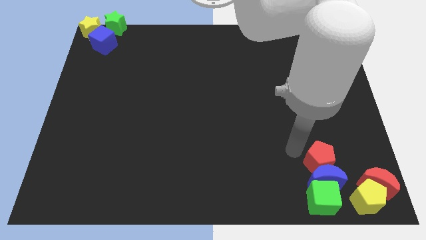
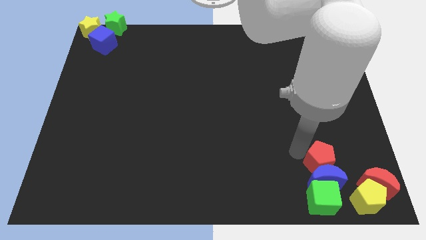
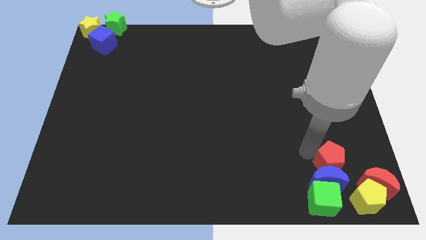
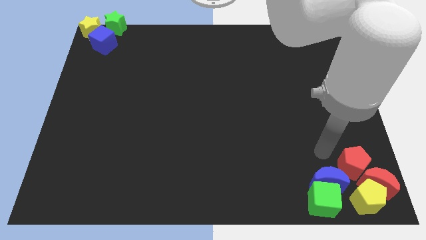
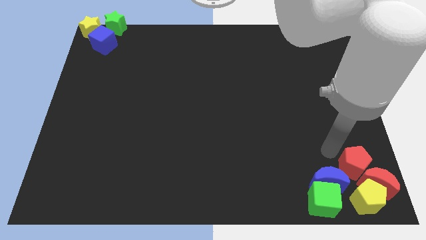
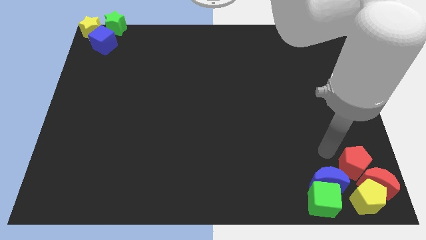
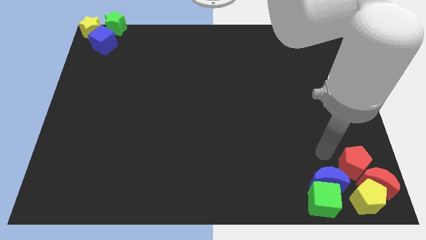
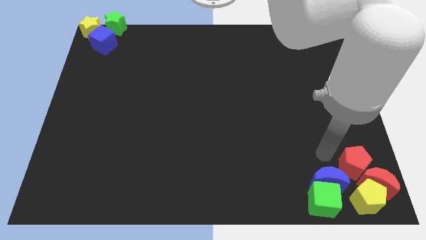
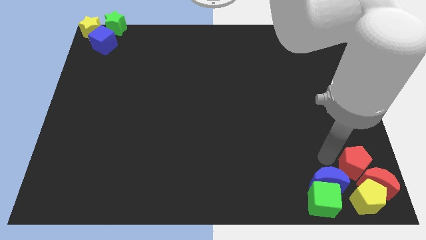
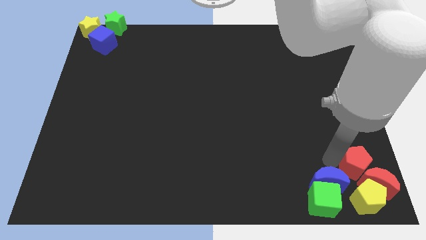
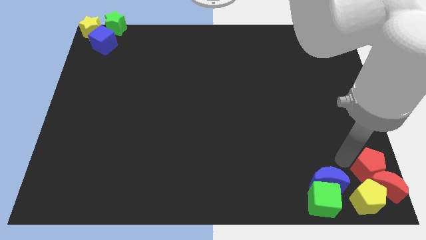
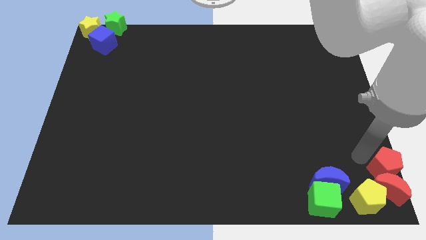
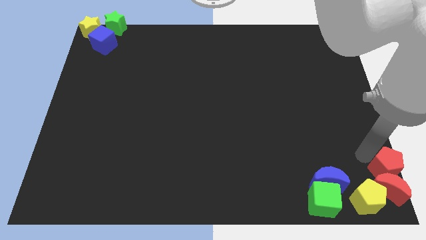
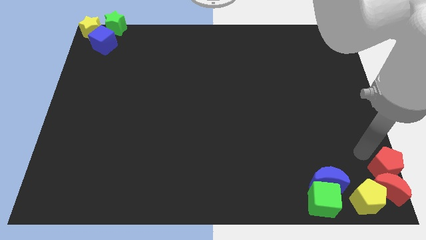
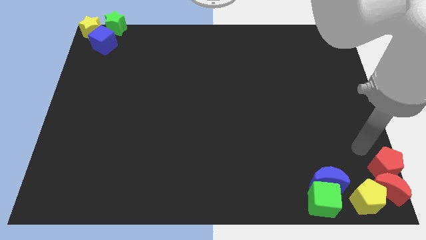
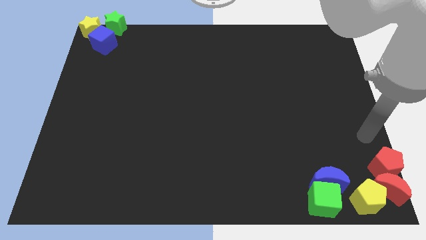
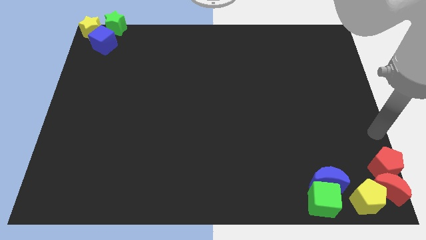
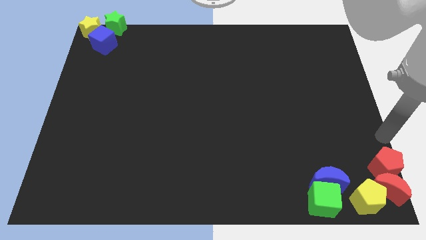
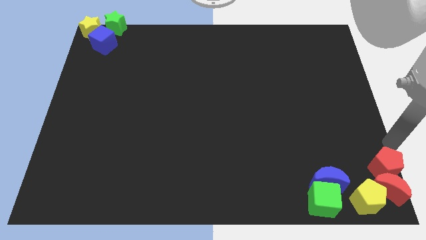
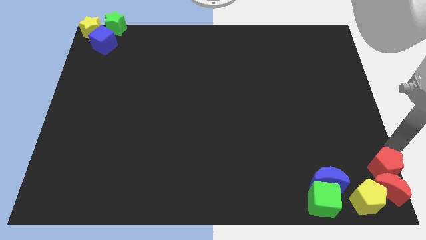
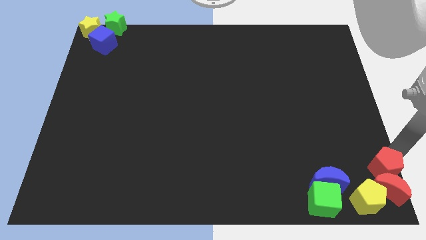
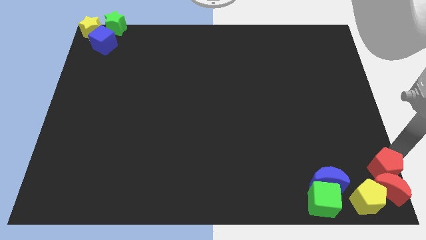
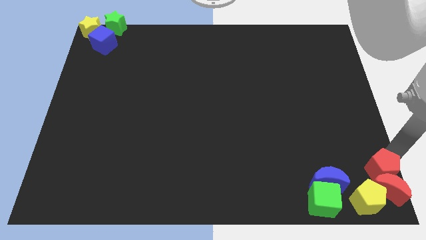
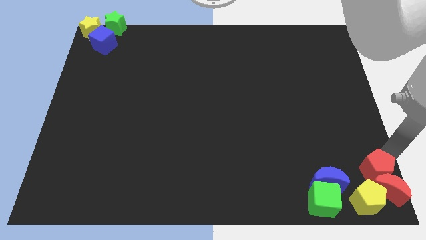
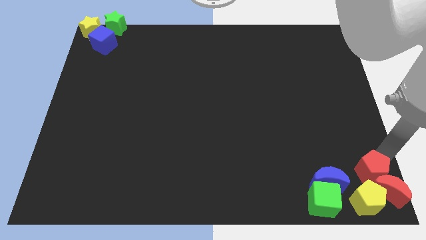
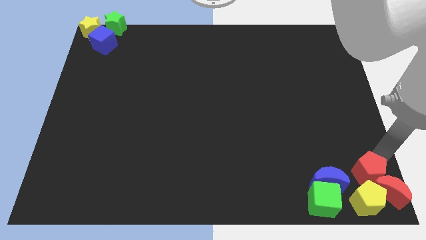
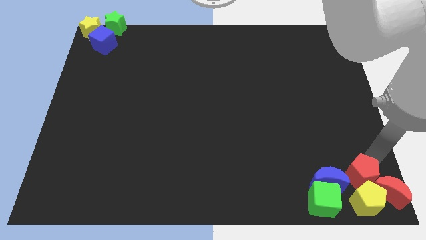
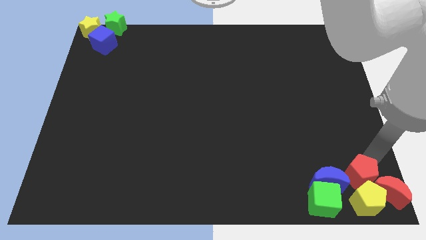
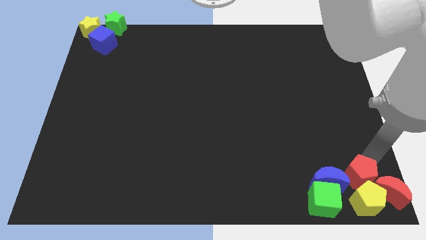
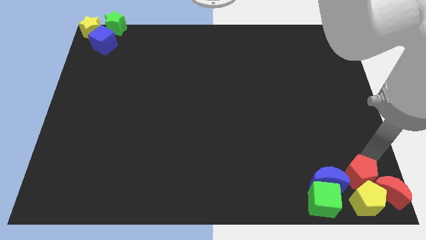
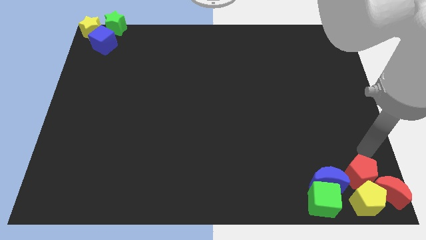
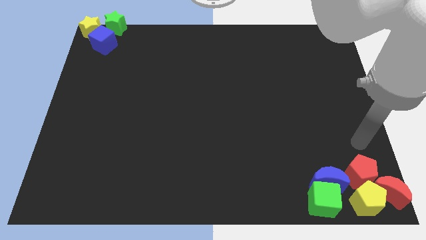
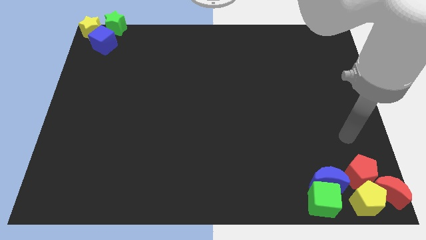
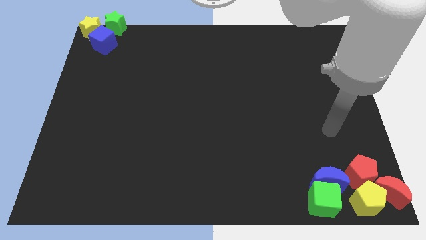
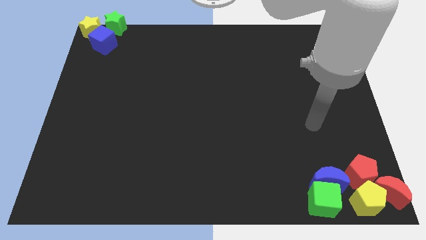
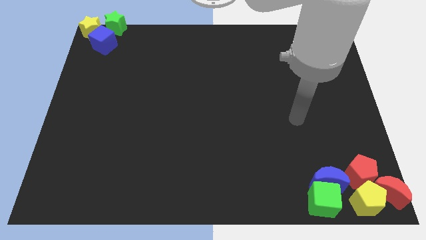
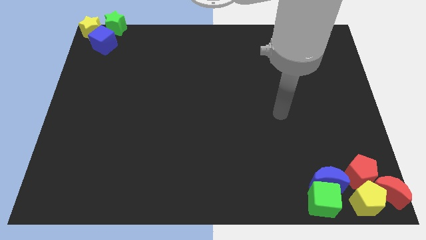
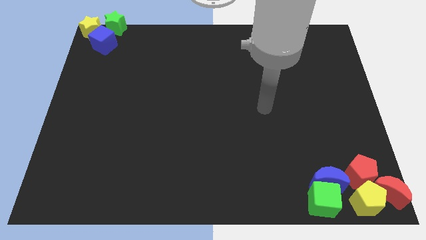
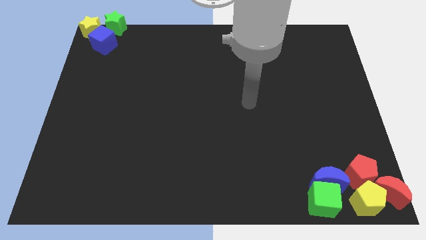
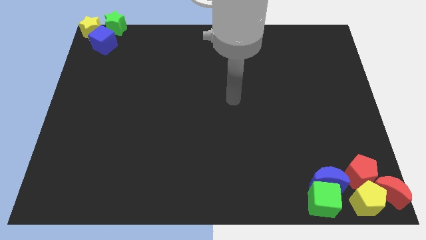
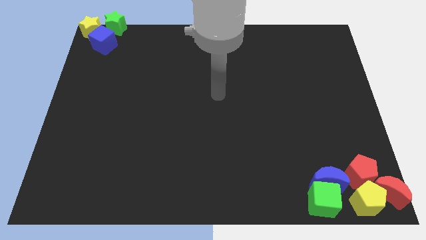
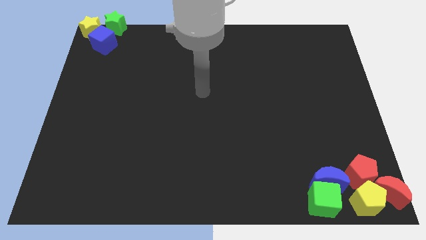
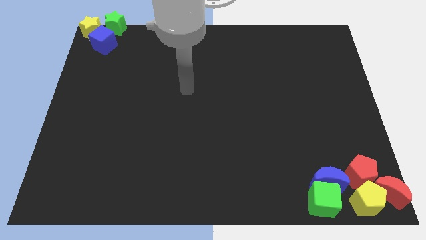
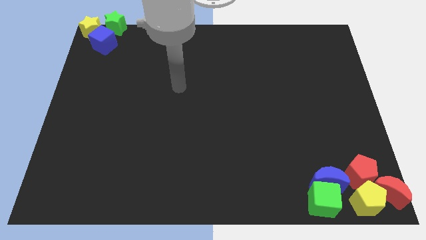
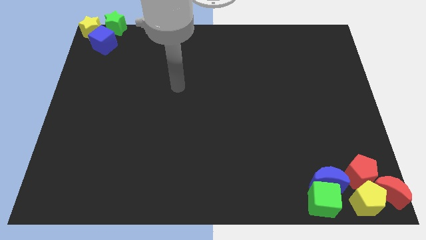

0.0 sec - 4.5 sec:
slide the red pentagon into the yellow pentagon

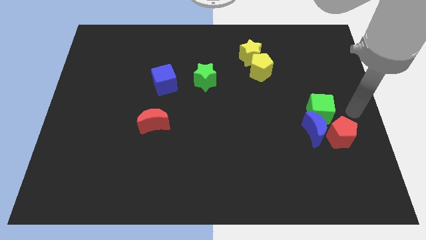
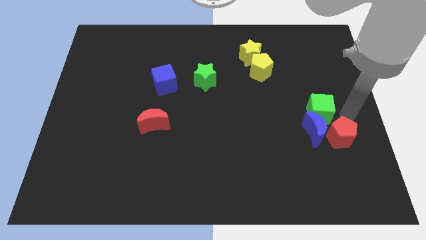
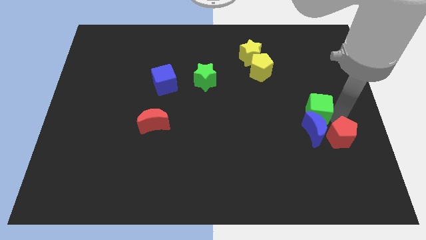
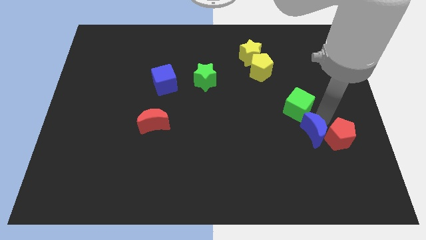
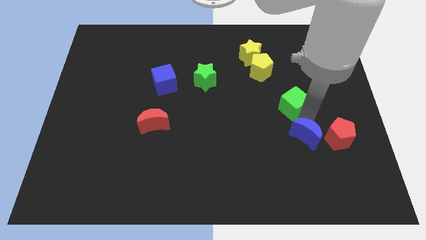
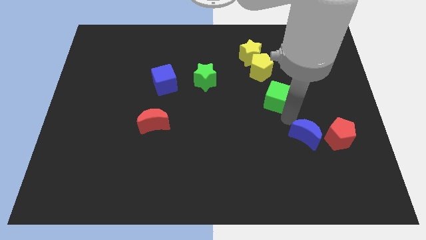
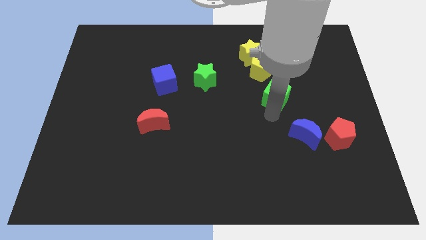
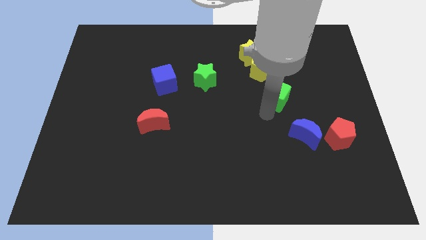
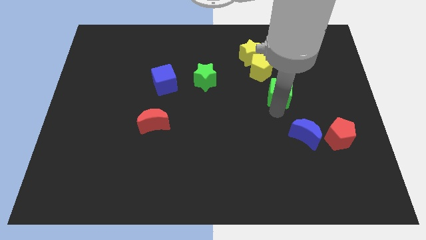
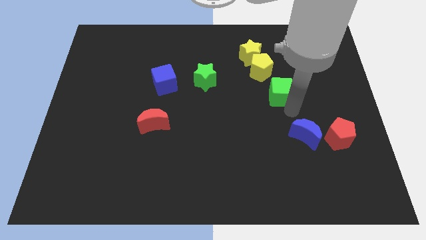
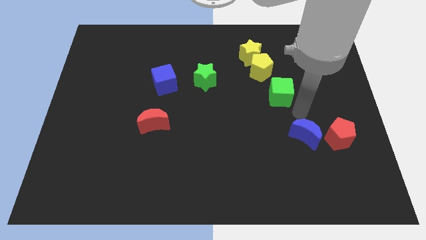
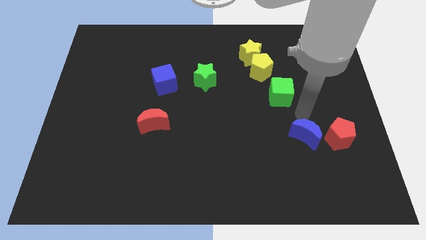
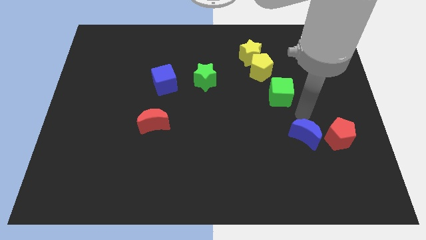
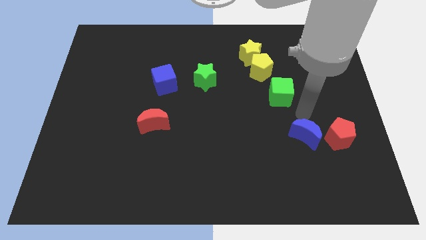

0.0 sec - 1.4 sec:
move the green cube diagonally to yellow pentagon

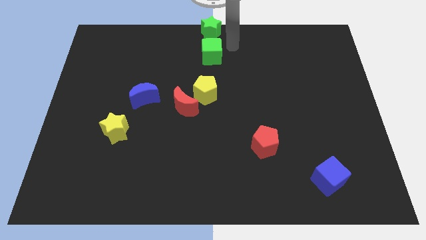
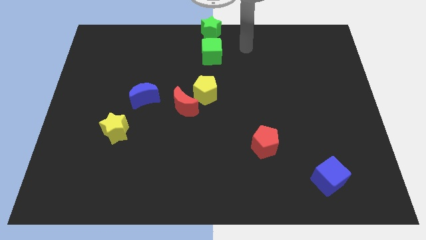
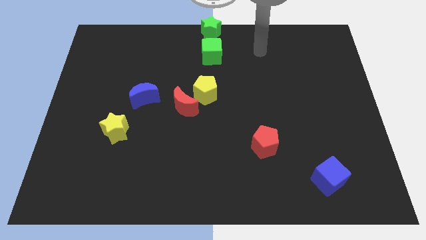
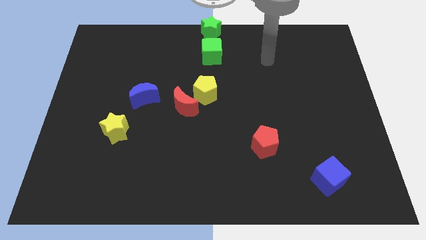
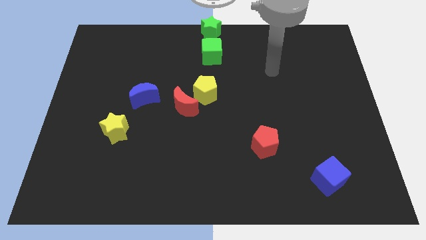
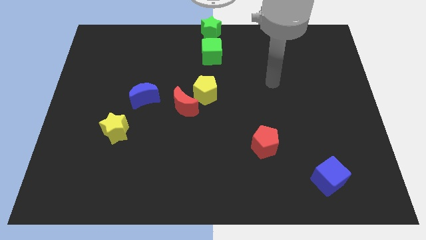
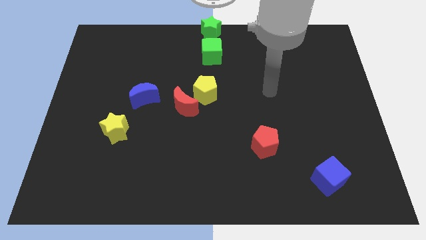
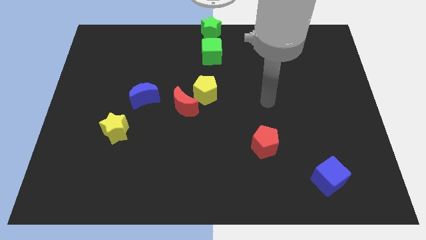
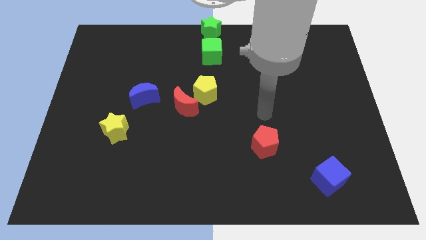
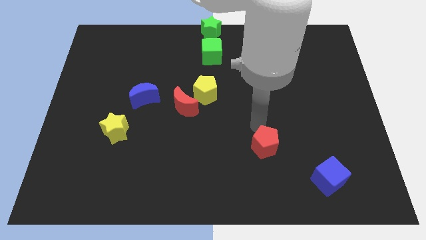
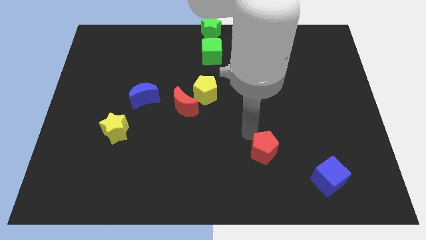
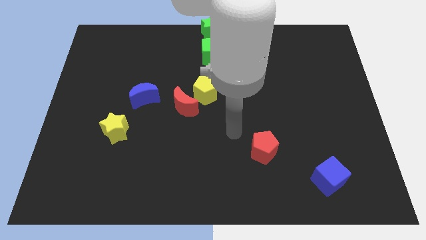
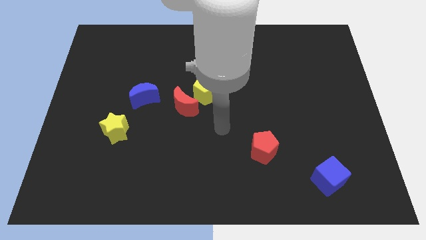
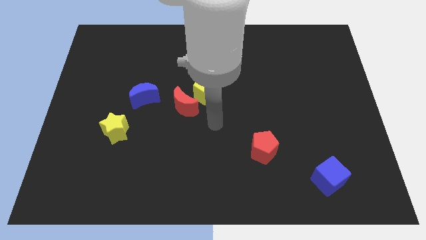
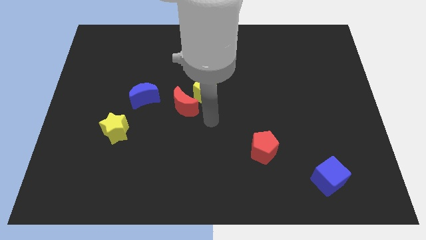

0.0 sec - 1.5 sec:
tap the red pentagon

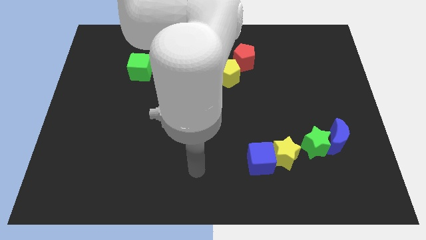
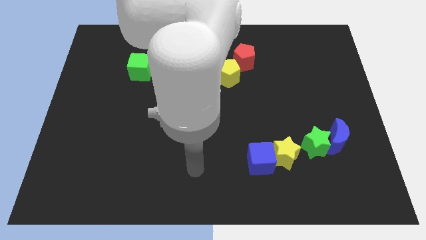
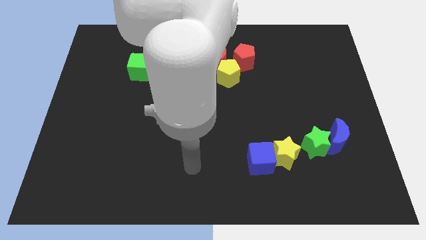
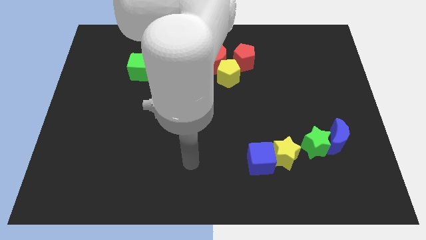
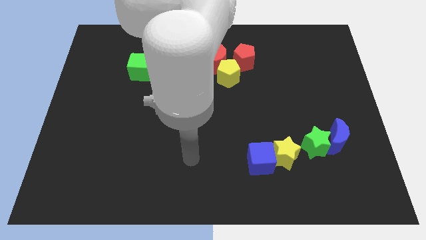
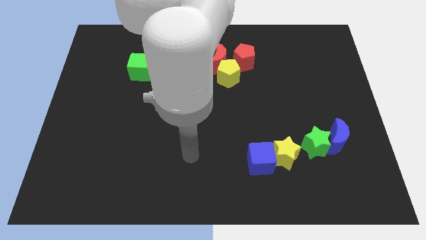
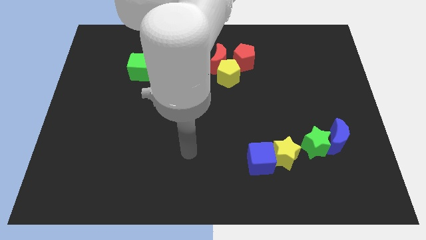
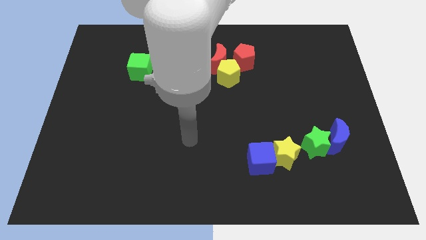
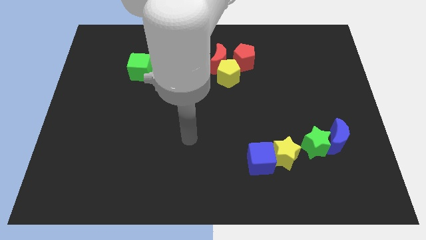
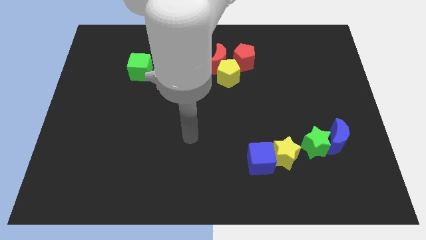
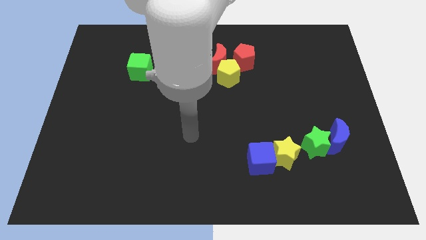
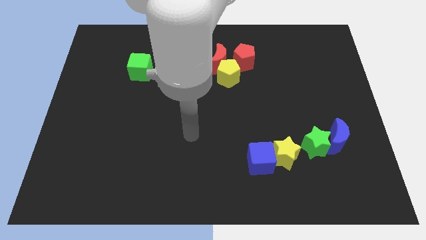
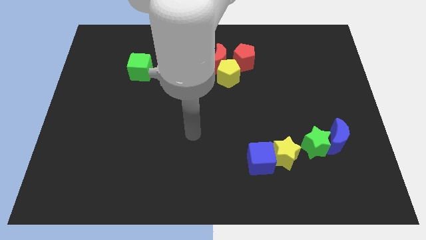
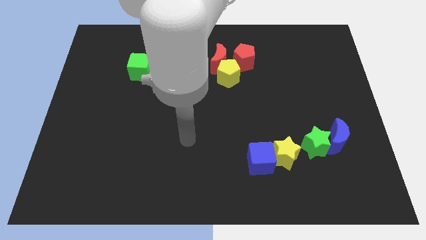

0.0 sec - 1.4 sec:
point your arm at the center of the board

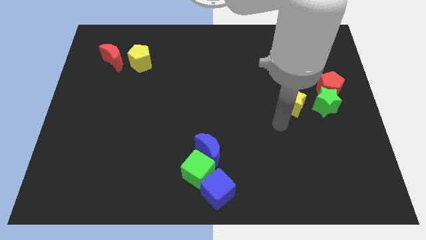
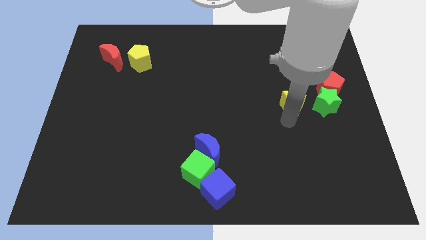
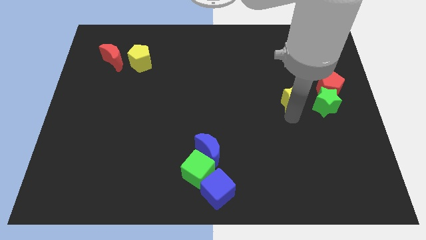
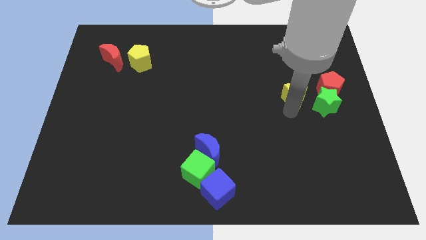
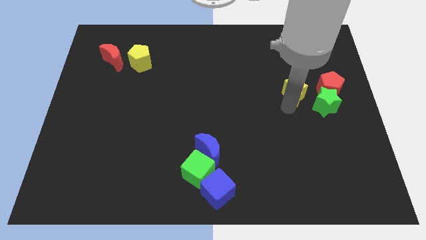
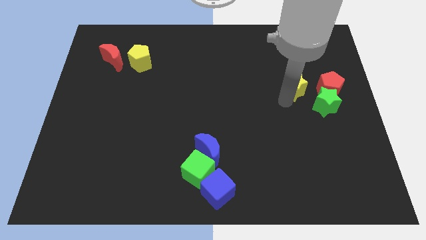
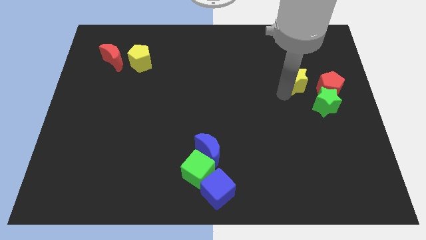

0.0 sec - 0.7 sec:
move the yellow star parallel to red pentagon
